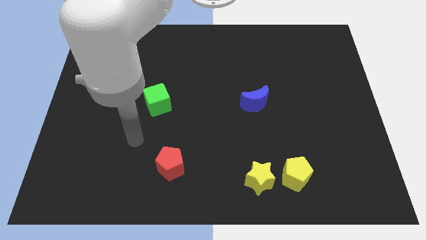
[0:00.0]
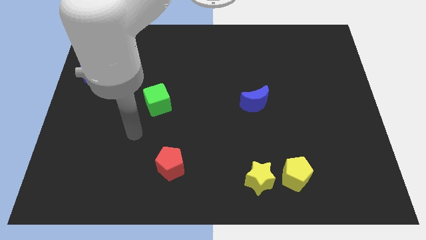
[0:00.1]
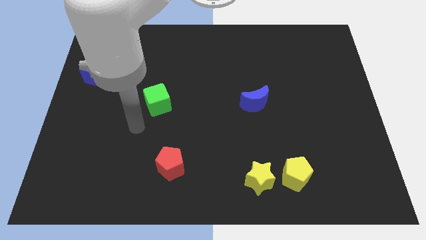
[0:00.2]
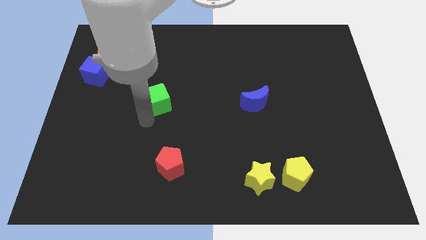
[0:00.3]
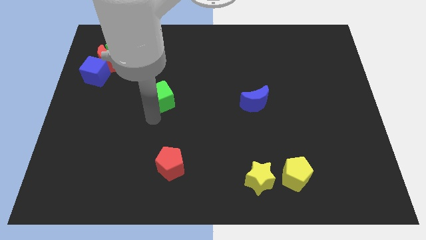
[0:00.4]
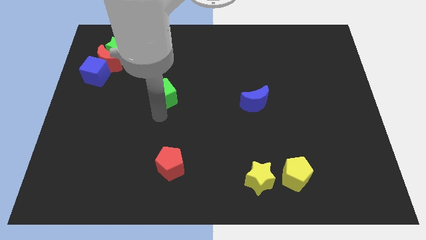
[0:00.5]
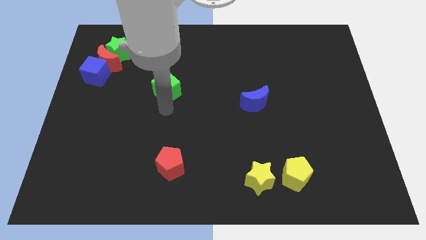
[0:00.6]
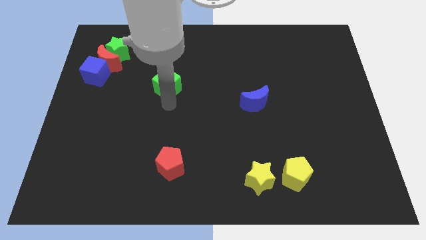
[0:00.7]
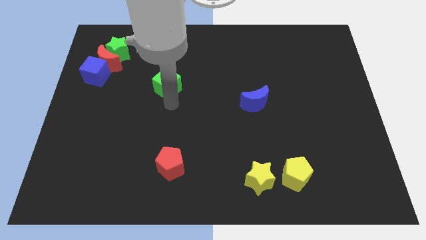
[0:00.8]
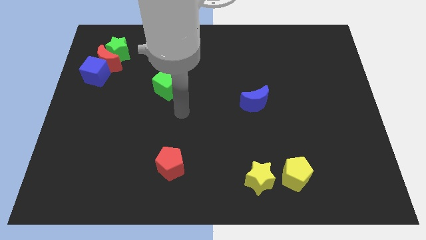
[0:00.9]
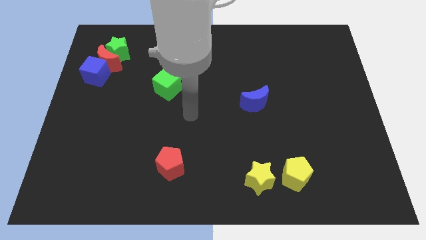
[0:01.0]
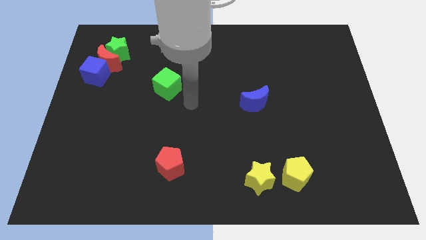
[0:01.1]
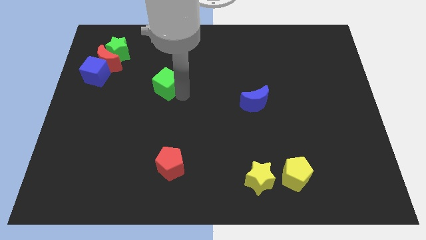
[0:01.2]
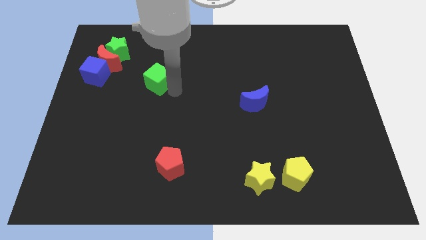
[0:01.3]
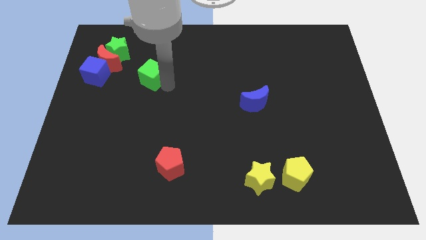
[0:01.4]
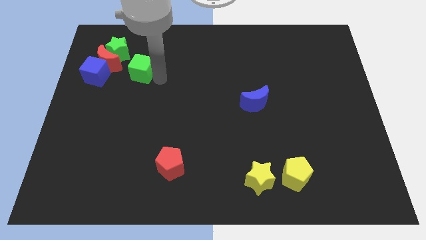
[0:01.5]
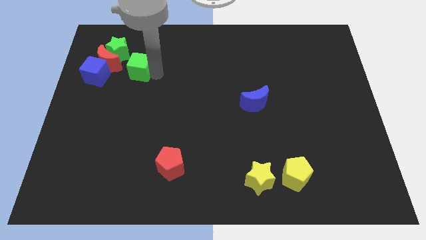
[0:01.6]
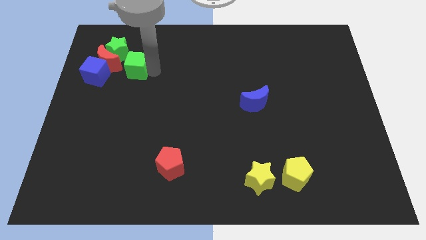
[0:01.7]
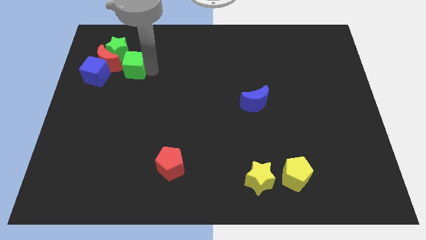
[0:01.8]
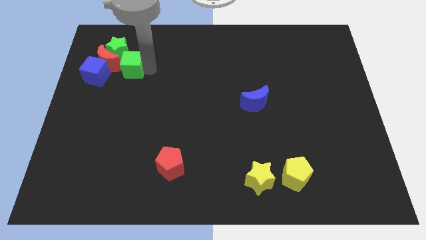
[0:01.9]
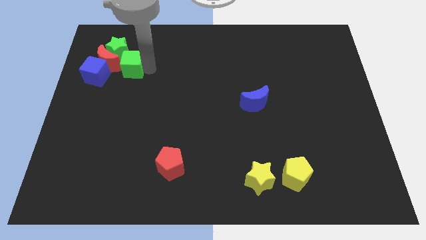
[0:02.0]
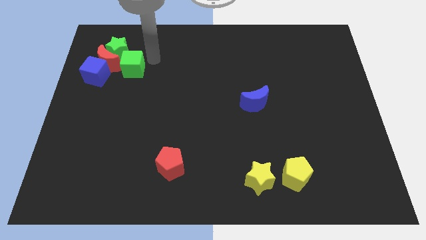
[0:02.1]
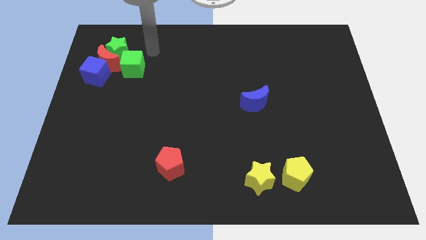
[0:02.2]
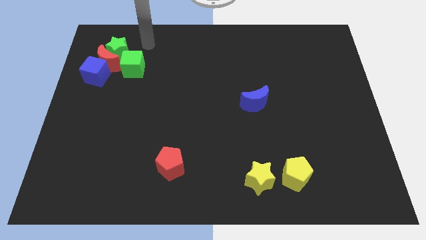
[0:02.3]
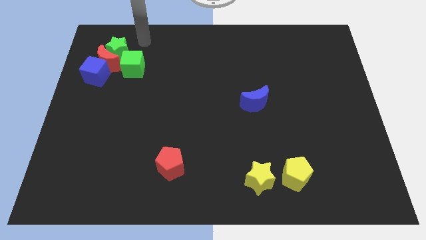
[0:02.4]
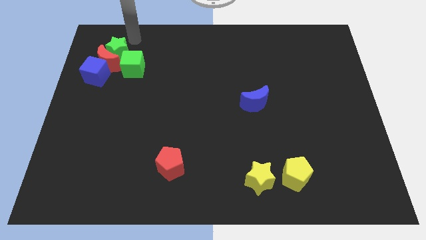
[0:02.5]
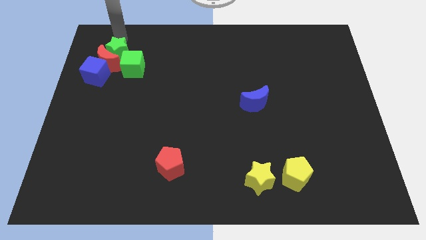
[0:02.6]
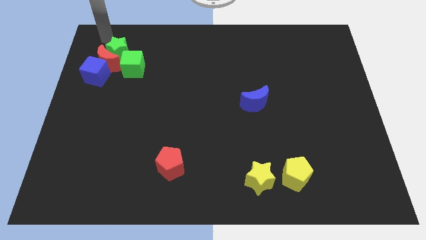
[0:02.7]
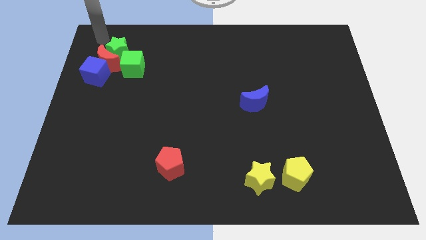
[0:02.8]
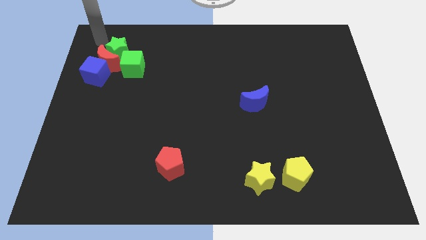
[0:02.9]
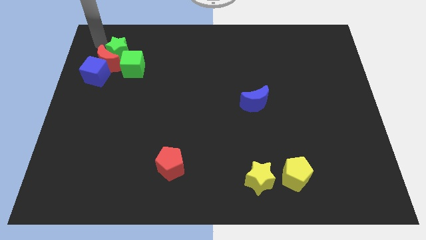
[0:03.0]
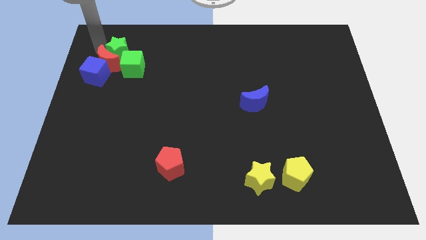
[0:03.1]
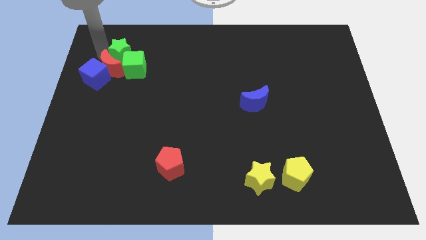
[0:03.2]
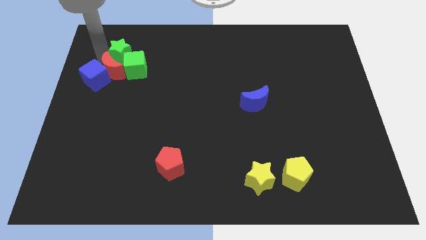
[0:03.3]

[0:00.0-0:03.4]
move green cube to the bottom right of green star

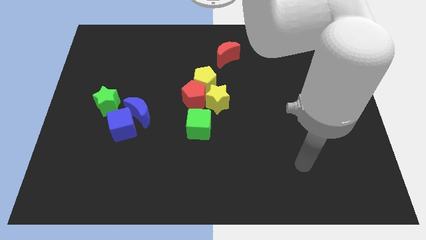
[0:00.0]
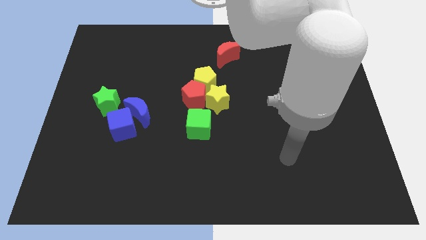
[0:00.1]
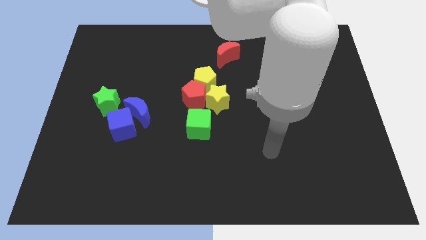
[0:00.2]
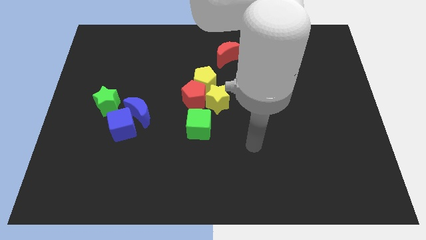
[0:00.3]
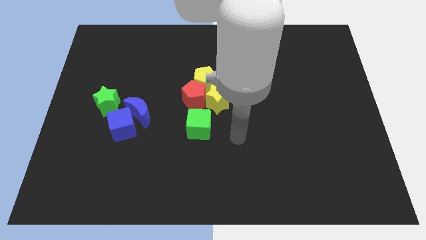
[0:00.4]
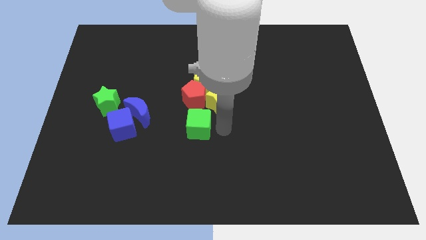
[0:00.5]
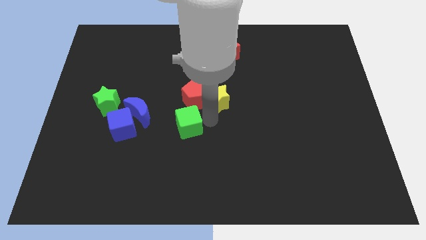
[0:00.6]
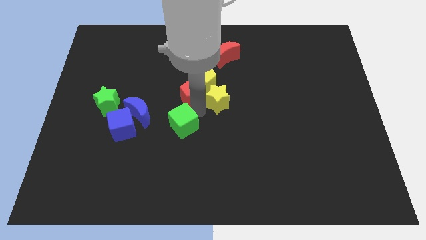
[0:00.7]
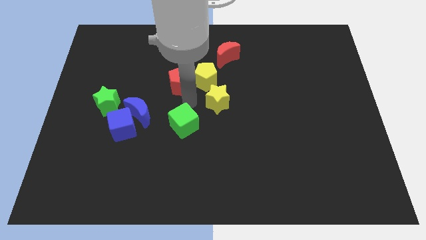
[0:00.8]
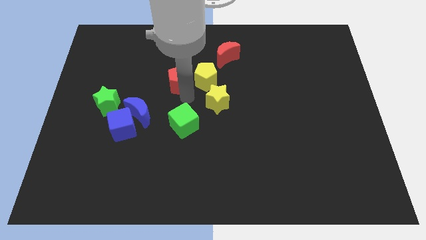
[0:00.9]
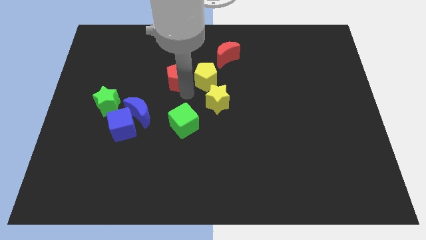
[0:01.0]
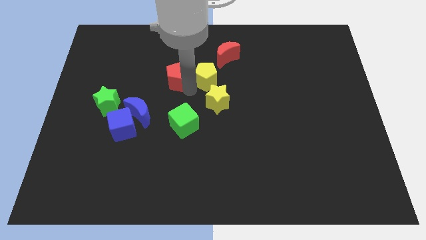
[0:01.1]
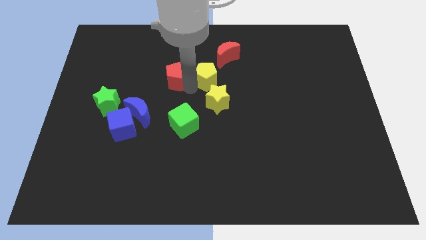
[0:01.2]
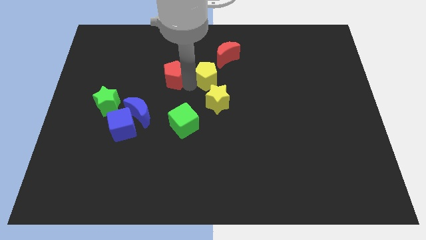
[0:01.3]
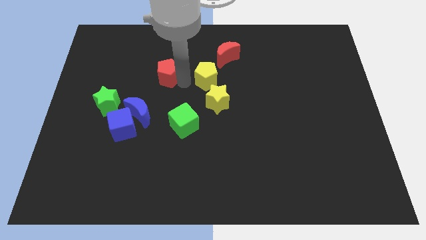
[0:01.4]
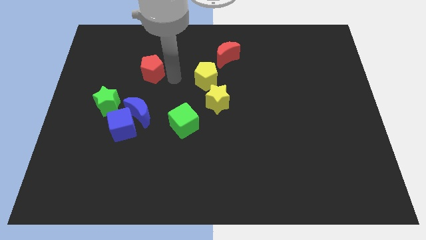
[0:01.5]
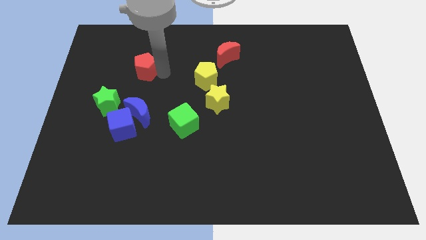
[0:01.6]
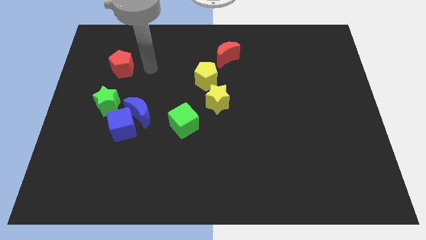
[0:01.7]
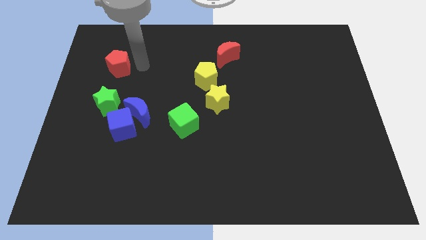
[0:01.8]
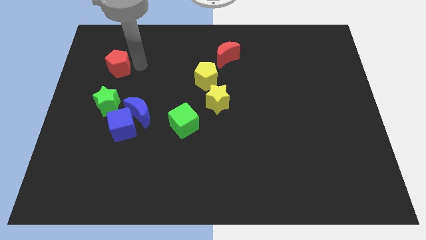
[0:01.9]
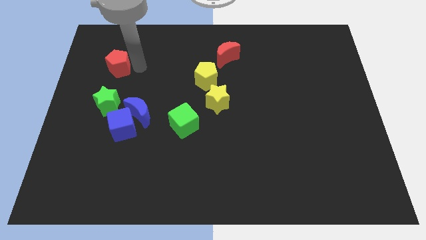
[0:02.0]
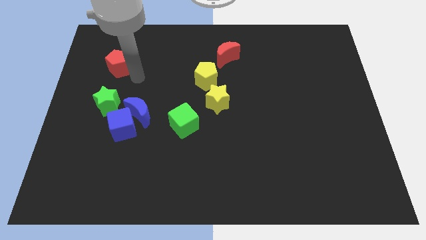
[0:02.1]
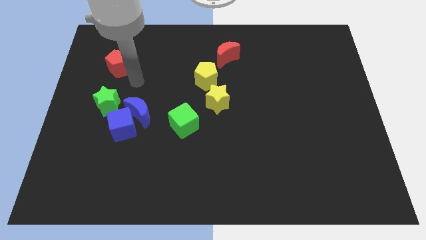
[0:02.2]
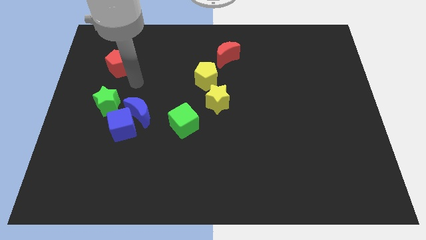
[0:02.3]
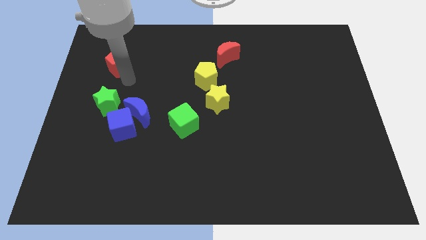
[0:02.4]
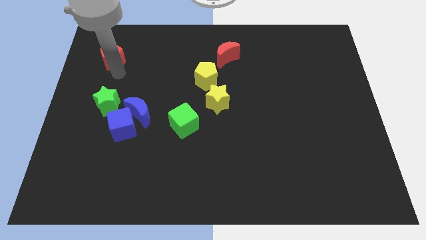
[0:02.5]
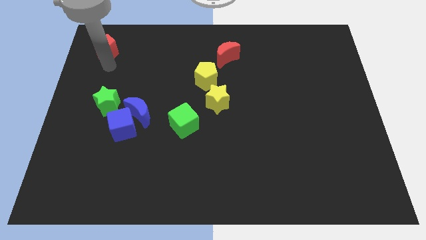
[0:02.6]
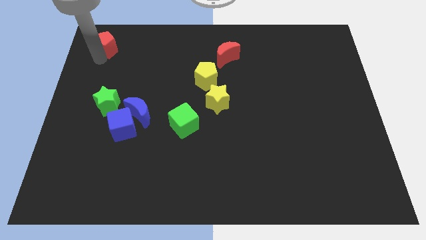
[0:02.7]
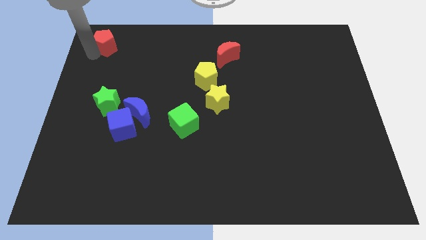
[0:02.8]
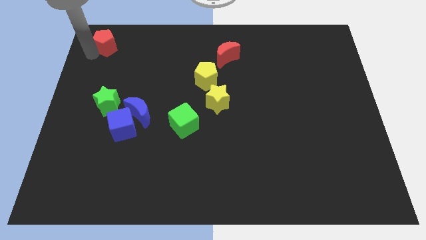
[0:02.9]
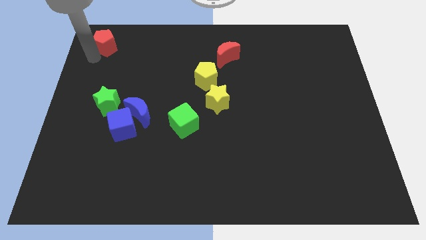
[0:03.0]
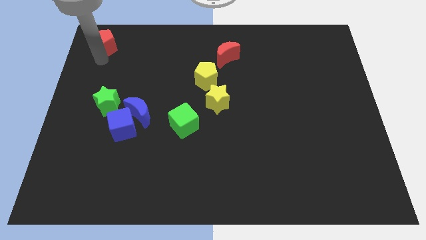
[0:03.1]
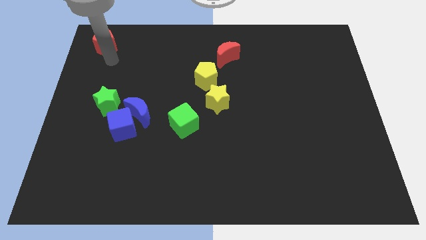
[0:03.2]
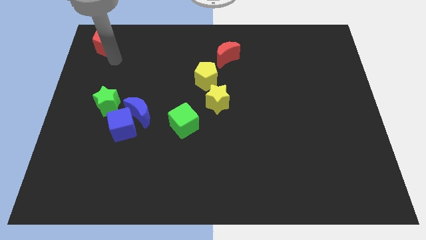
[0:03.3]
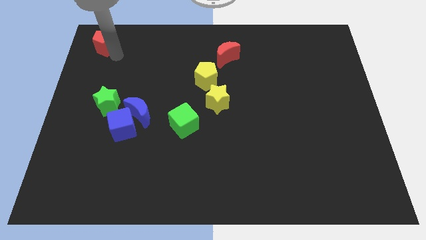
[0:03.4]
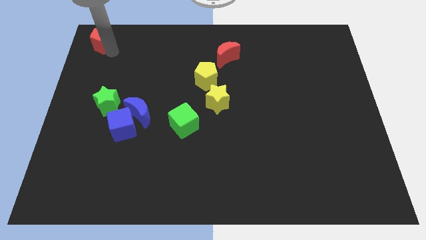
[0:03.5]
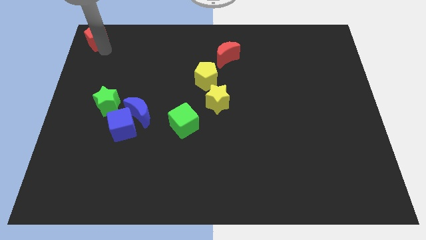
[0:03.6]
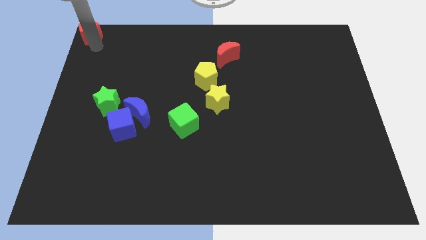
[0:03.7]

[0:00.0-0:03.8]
move the red pentagon to the top left corner of the board

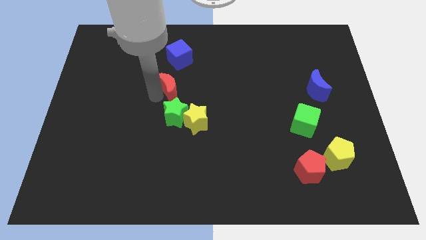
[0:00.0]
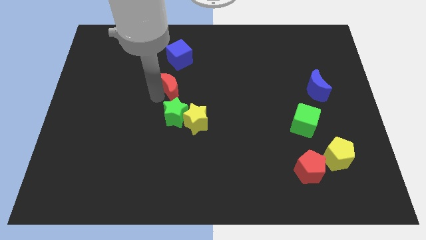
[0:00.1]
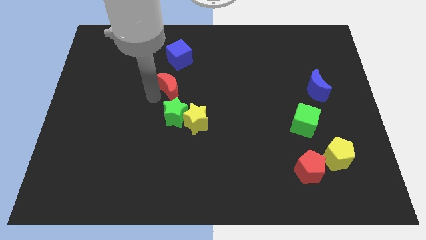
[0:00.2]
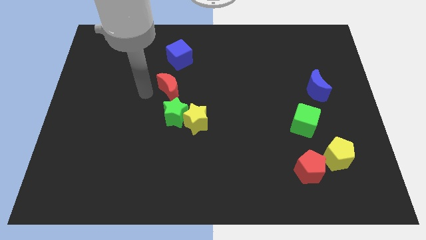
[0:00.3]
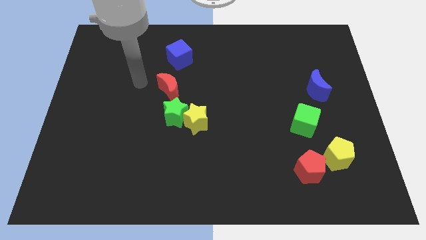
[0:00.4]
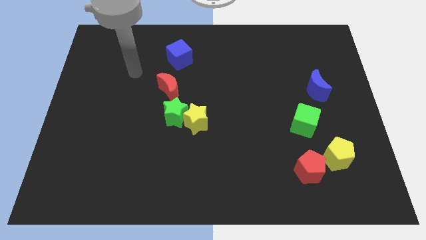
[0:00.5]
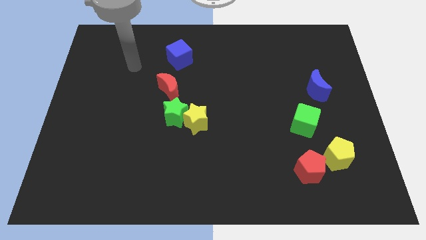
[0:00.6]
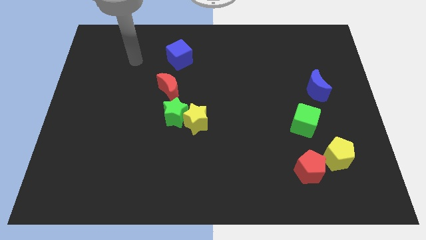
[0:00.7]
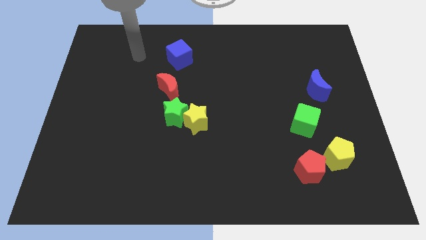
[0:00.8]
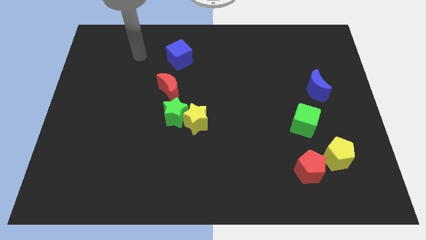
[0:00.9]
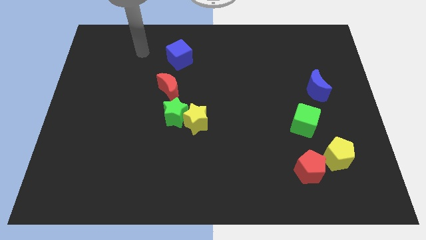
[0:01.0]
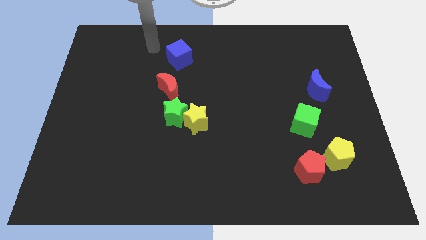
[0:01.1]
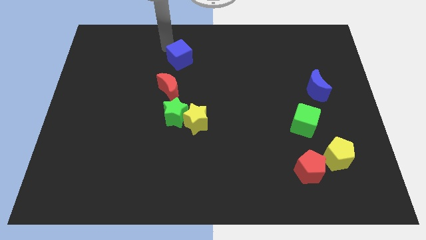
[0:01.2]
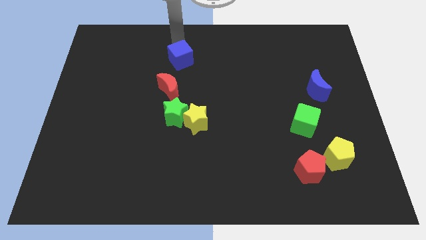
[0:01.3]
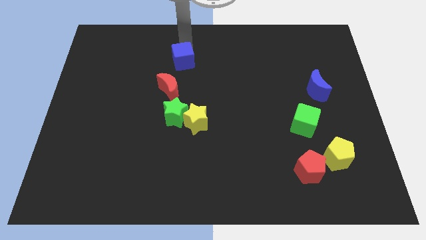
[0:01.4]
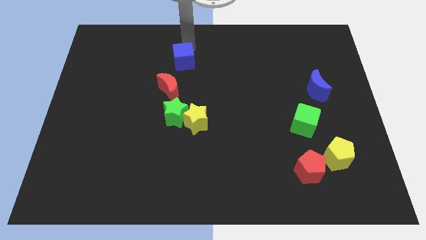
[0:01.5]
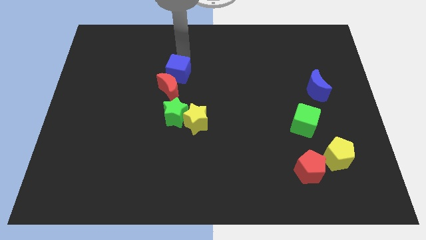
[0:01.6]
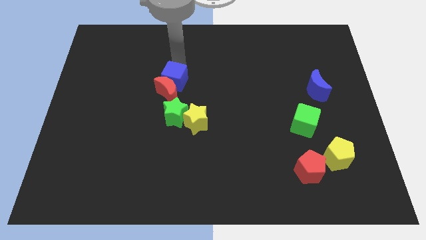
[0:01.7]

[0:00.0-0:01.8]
move the blue cube into the top side of the red crescent
